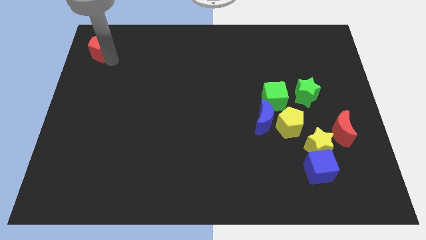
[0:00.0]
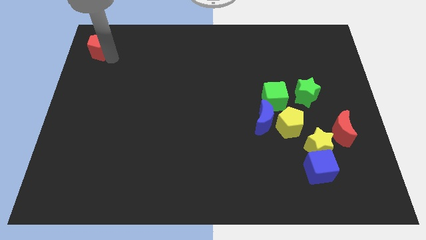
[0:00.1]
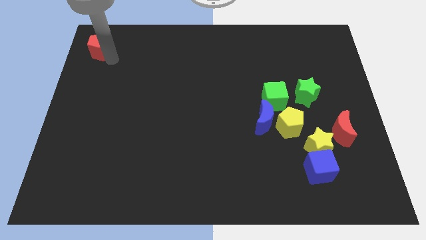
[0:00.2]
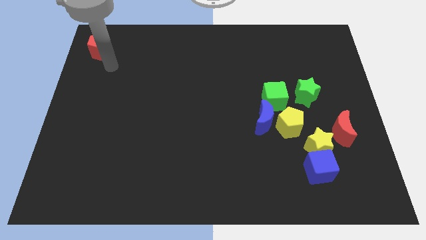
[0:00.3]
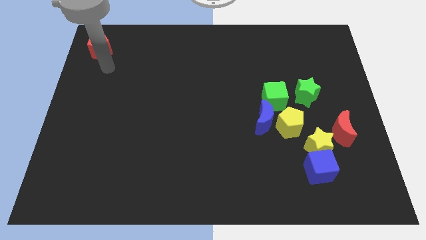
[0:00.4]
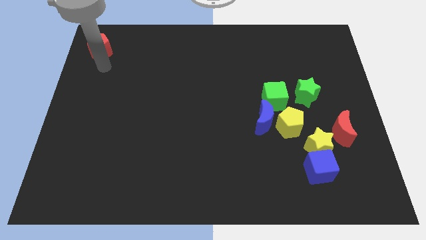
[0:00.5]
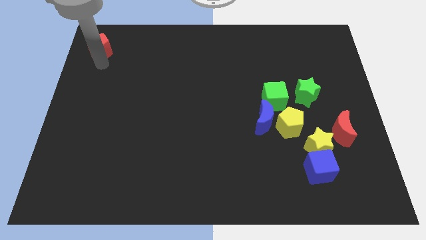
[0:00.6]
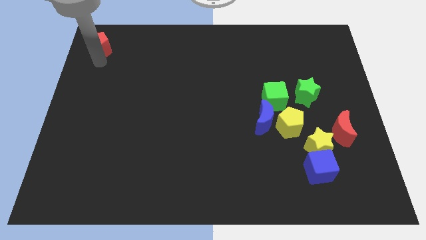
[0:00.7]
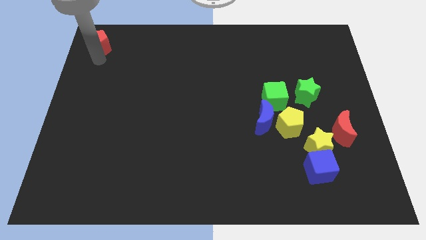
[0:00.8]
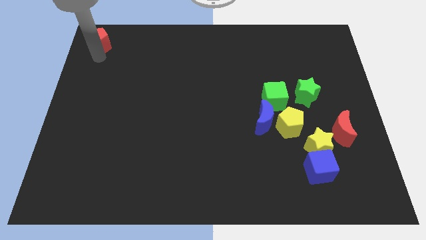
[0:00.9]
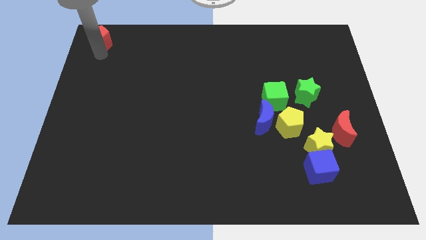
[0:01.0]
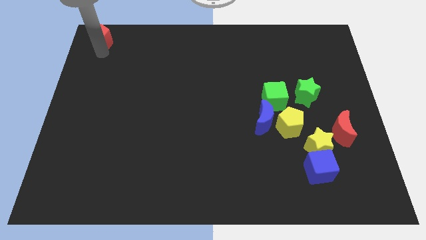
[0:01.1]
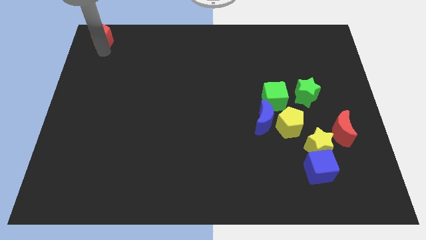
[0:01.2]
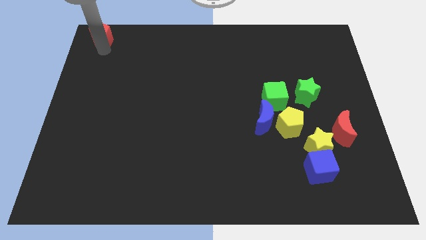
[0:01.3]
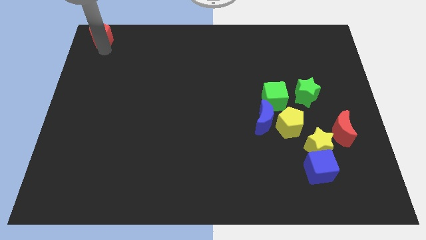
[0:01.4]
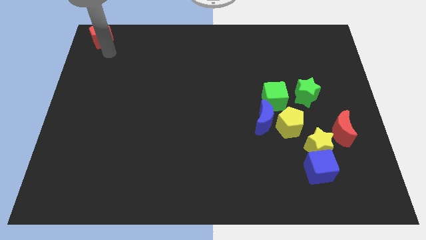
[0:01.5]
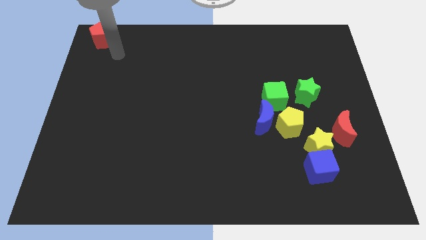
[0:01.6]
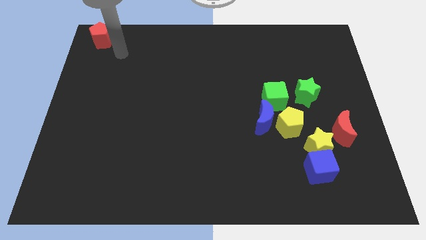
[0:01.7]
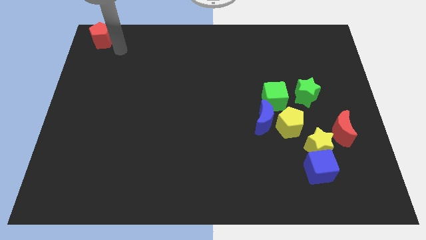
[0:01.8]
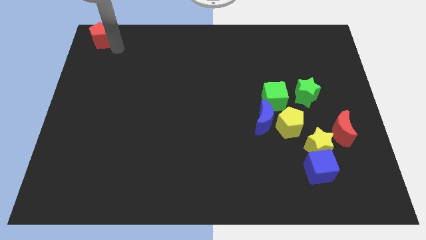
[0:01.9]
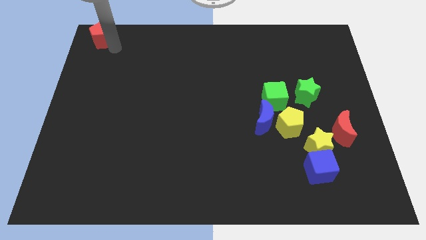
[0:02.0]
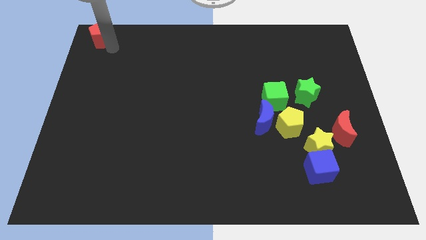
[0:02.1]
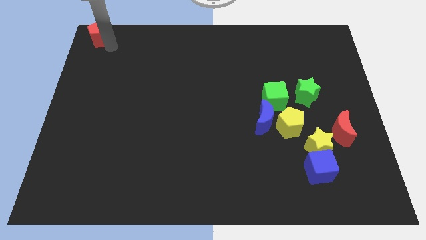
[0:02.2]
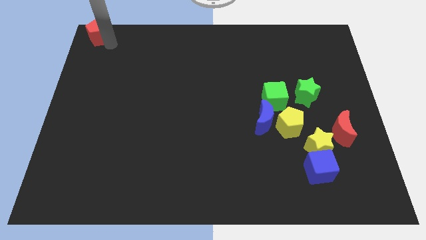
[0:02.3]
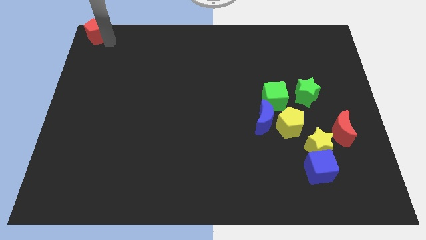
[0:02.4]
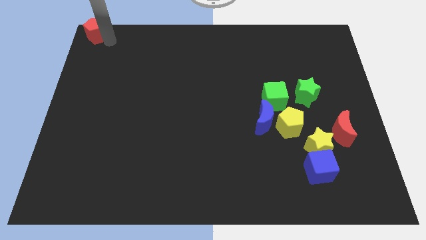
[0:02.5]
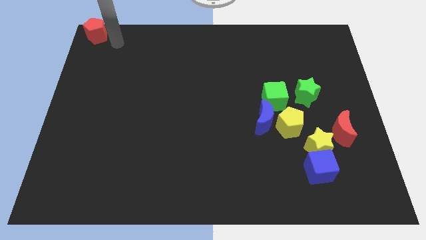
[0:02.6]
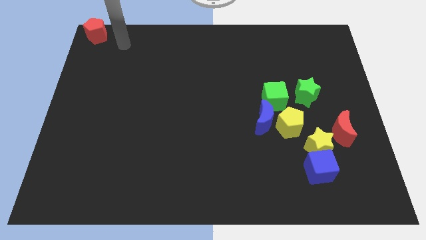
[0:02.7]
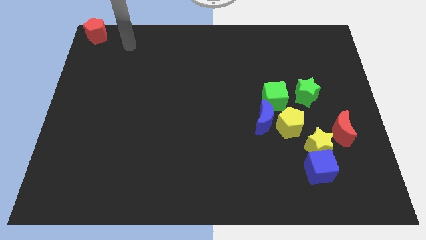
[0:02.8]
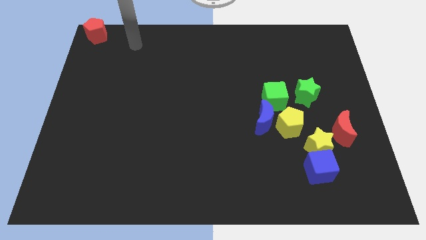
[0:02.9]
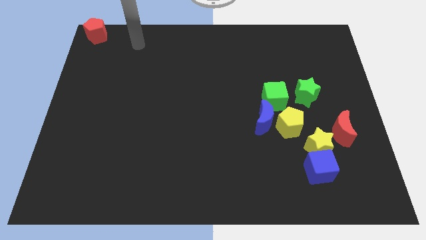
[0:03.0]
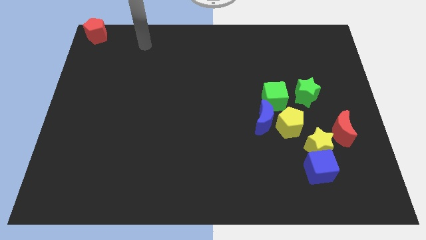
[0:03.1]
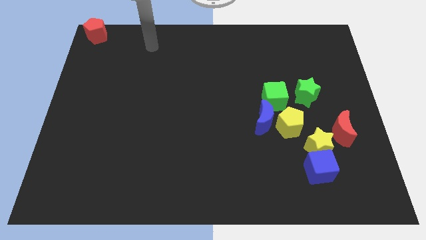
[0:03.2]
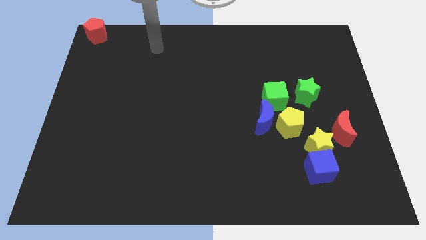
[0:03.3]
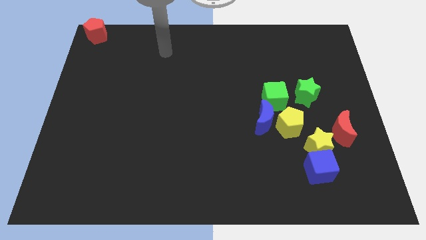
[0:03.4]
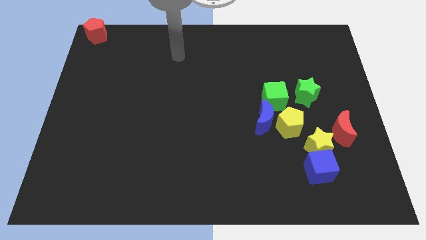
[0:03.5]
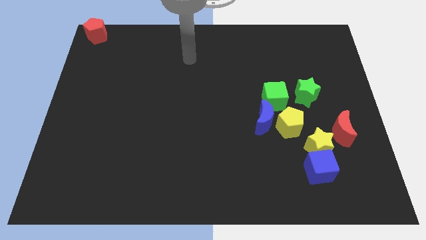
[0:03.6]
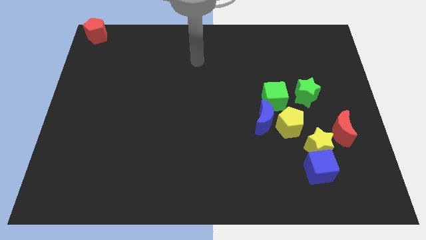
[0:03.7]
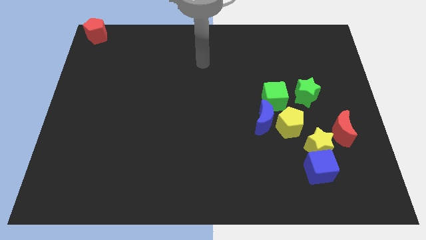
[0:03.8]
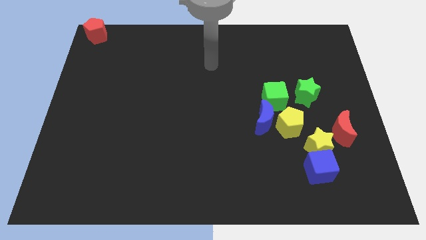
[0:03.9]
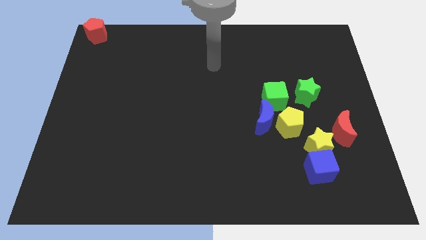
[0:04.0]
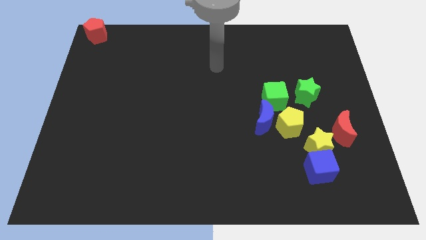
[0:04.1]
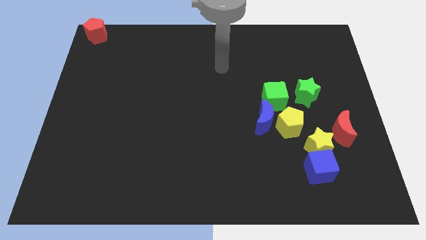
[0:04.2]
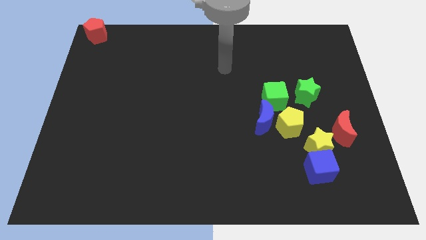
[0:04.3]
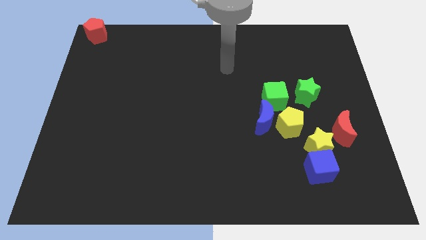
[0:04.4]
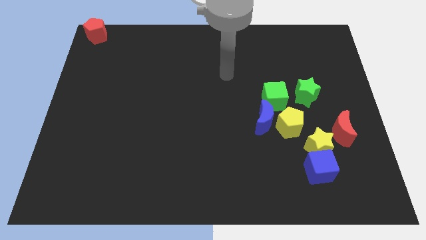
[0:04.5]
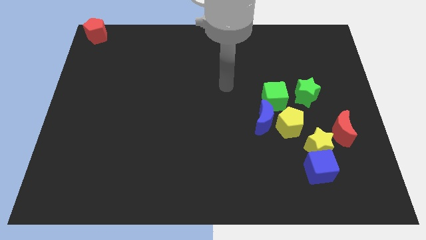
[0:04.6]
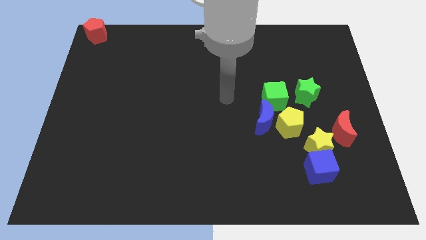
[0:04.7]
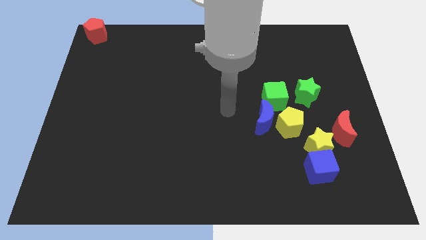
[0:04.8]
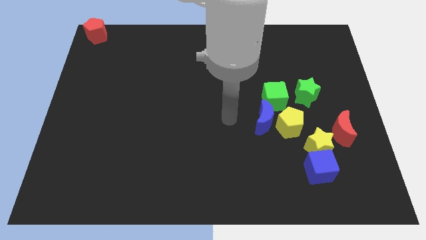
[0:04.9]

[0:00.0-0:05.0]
push the red block to the top left corner of the board

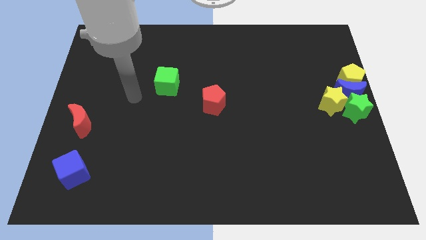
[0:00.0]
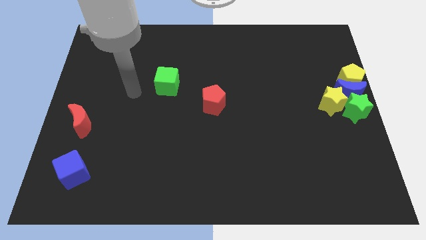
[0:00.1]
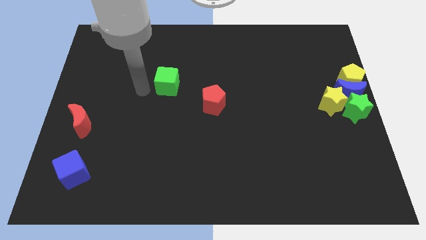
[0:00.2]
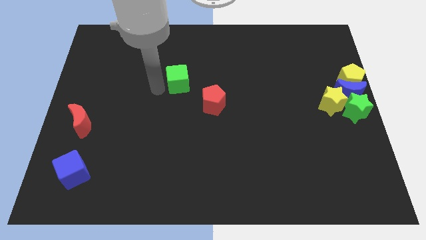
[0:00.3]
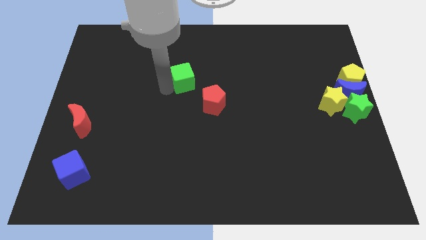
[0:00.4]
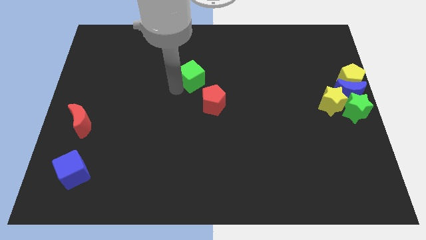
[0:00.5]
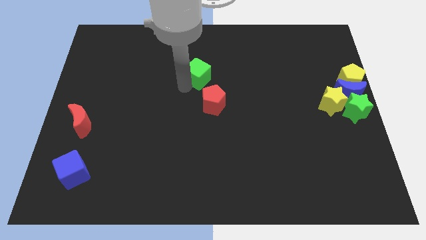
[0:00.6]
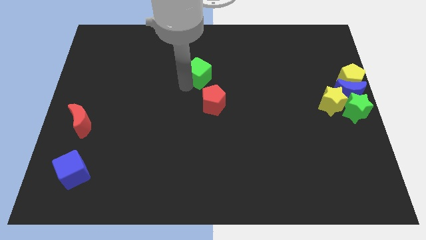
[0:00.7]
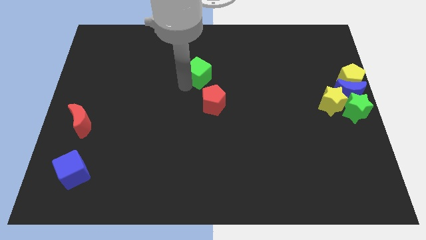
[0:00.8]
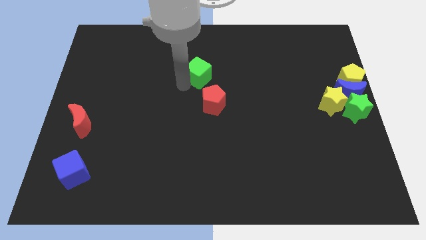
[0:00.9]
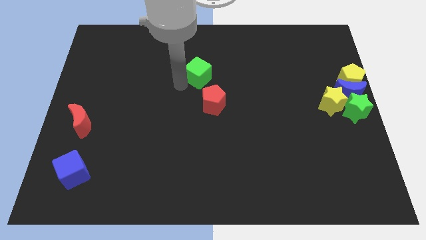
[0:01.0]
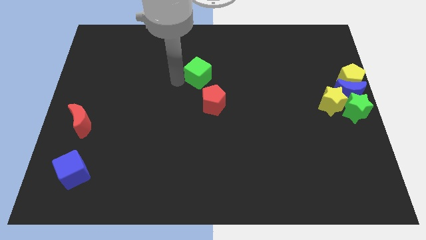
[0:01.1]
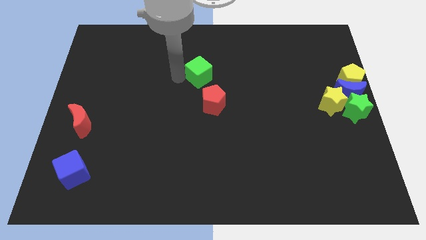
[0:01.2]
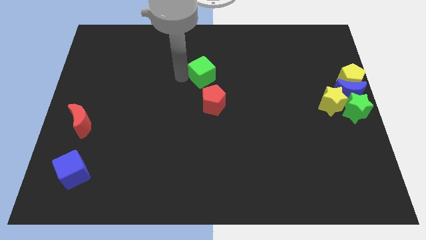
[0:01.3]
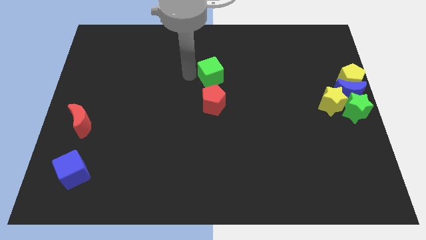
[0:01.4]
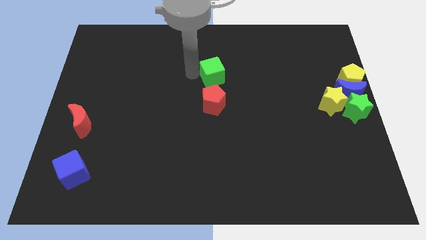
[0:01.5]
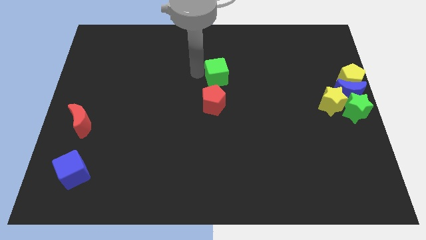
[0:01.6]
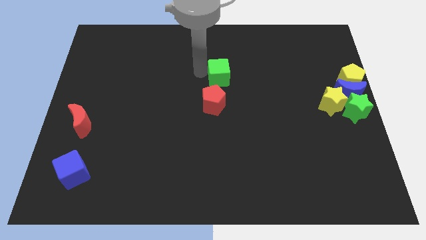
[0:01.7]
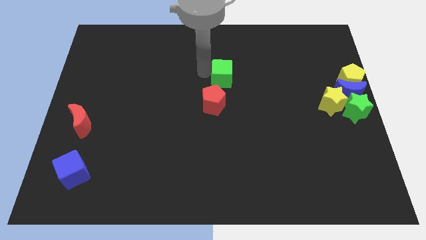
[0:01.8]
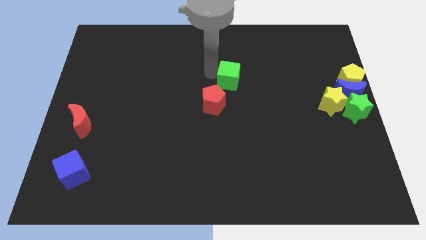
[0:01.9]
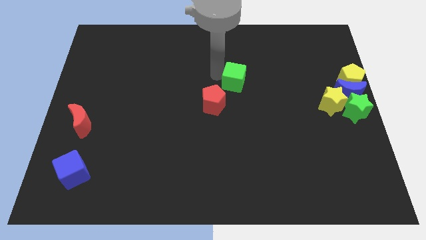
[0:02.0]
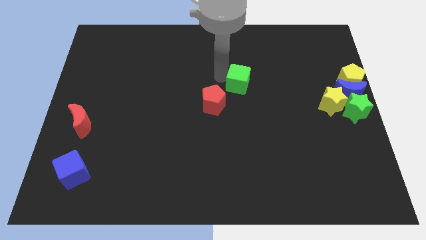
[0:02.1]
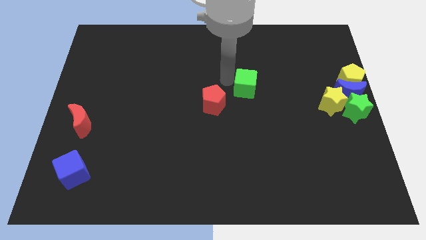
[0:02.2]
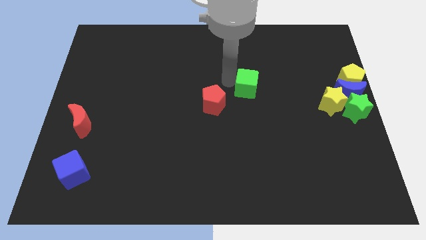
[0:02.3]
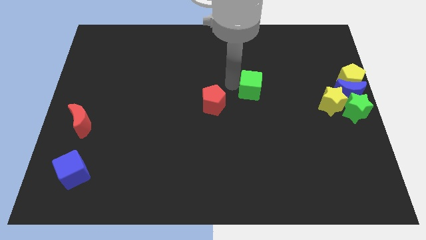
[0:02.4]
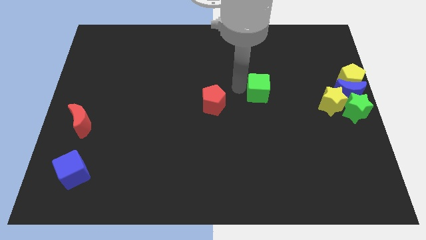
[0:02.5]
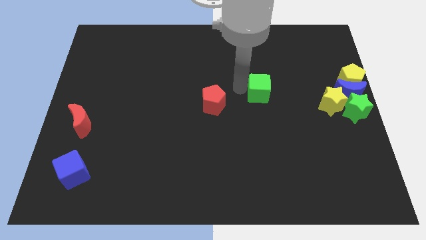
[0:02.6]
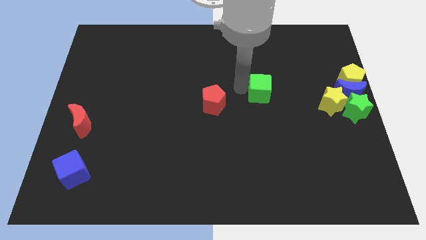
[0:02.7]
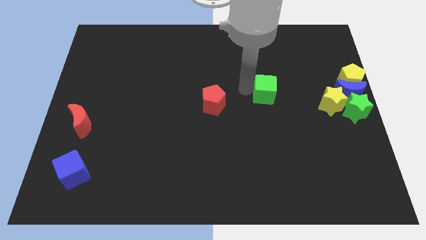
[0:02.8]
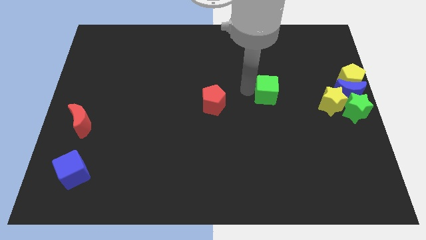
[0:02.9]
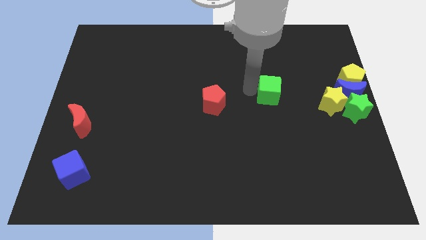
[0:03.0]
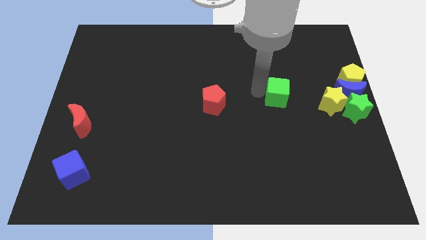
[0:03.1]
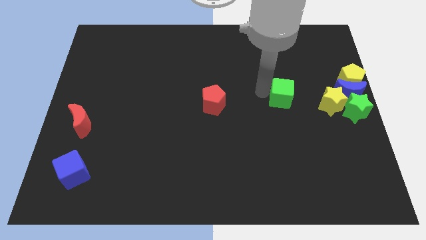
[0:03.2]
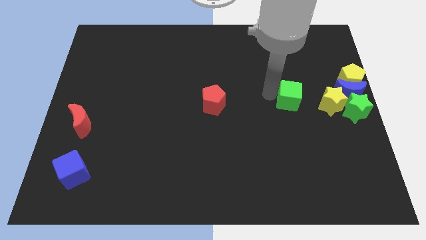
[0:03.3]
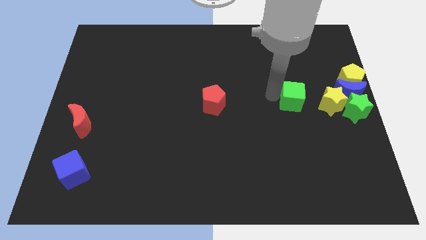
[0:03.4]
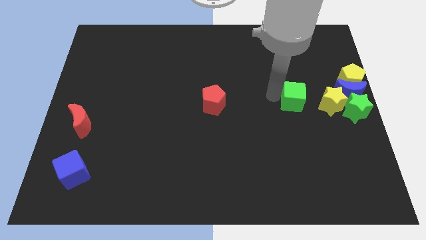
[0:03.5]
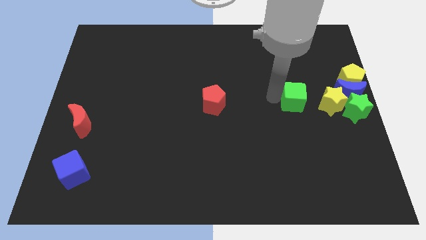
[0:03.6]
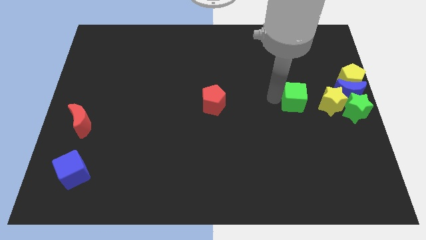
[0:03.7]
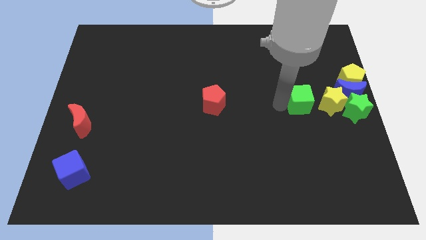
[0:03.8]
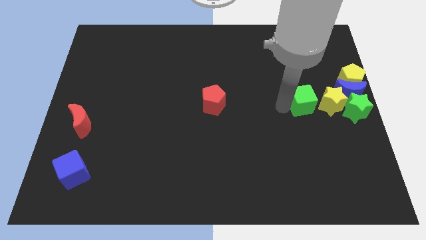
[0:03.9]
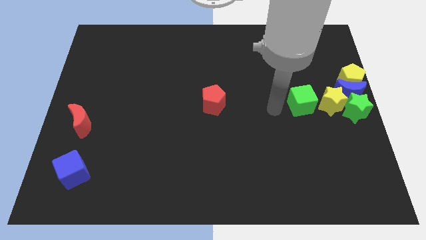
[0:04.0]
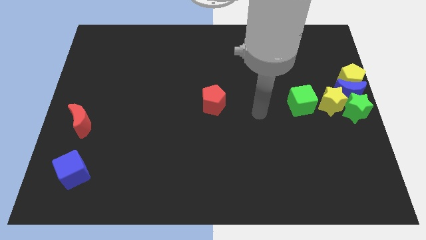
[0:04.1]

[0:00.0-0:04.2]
place green cube to the left of yellow star
